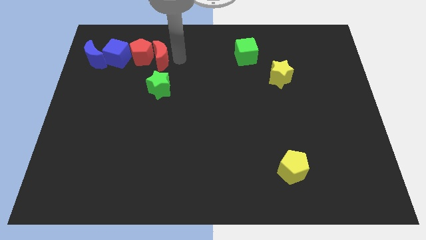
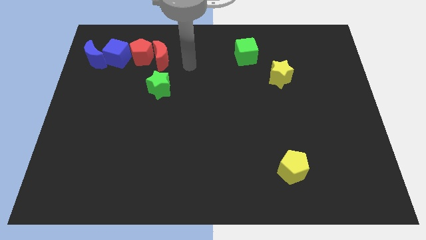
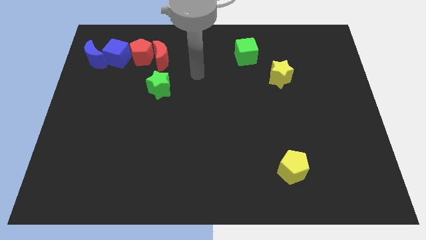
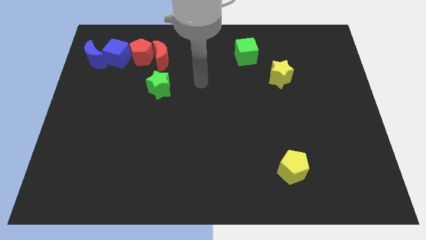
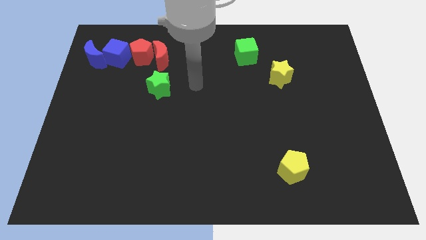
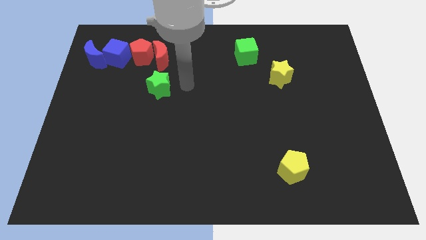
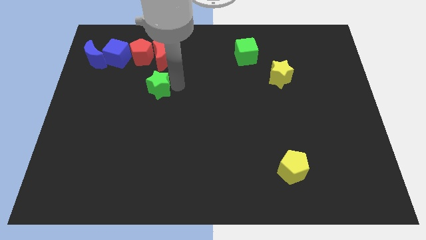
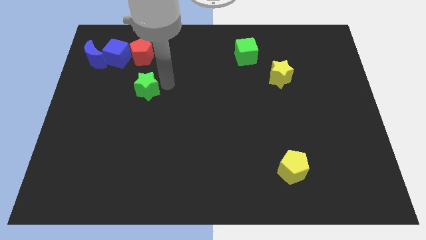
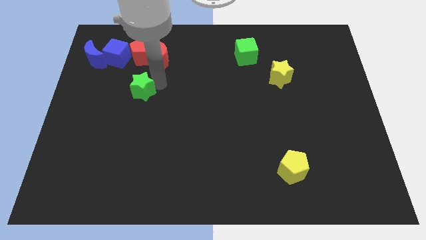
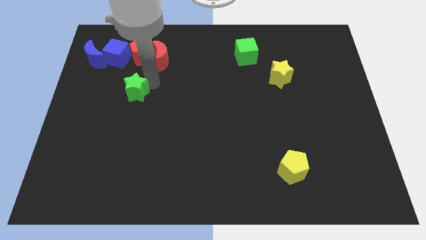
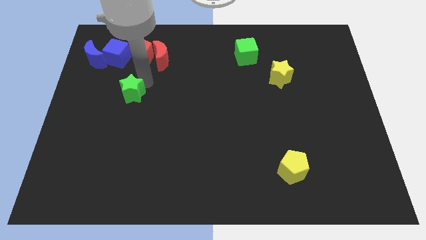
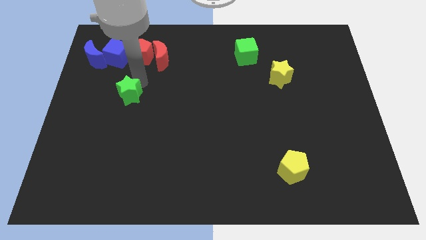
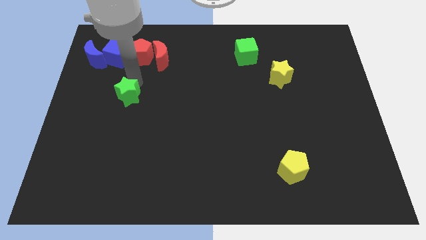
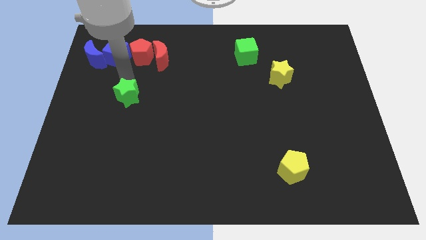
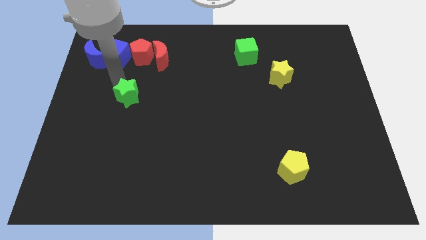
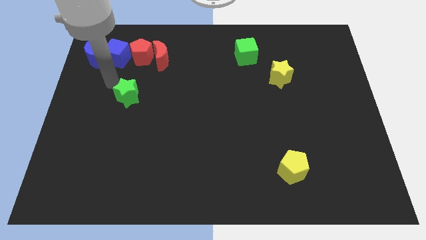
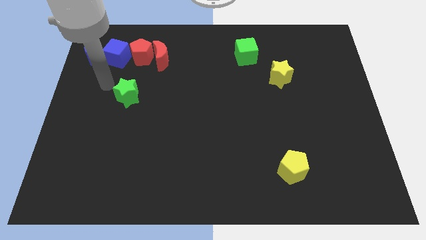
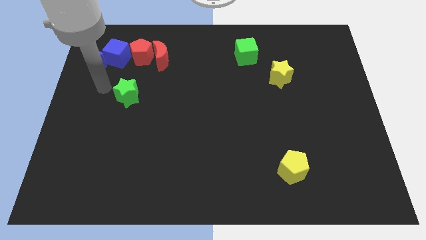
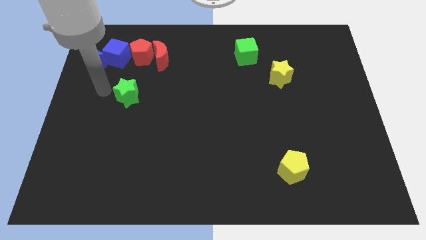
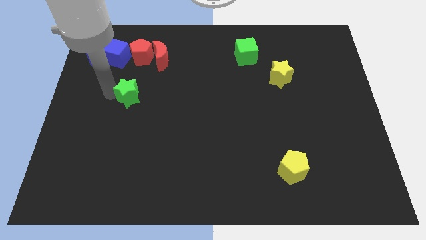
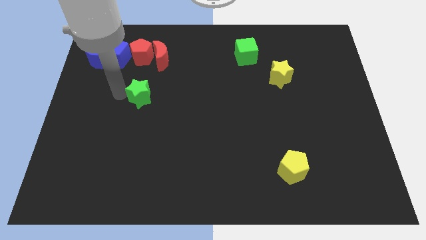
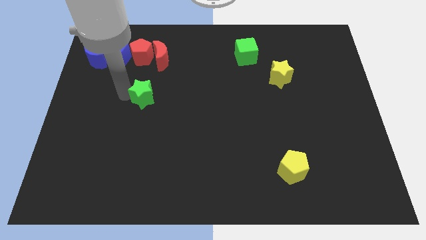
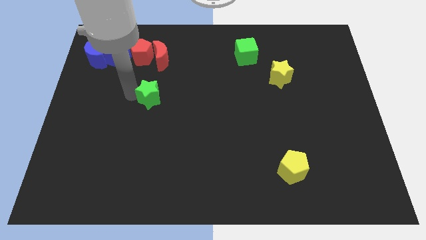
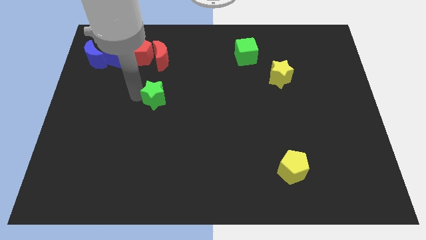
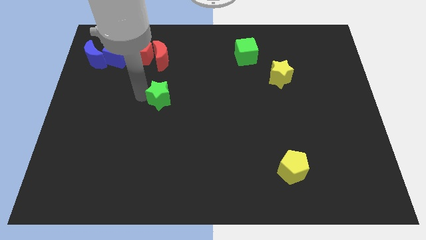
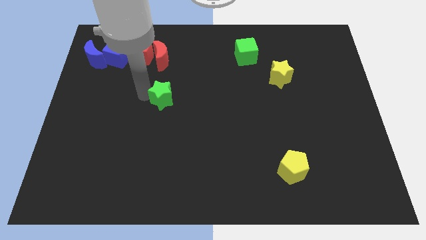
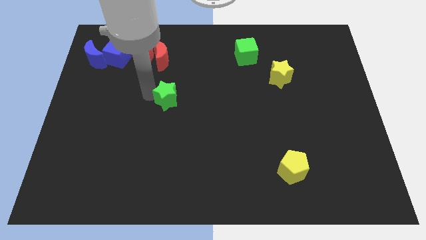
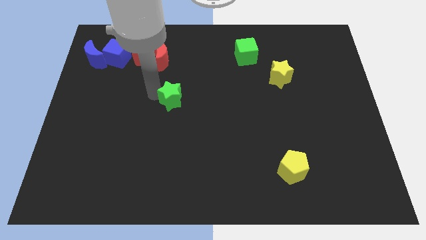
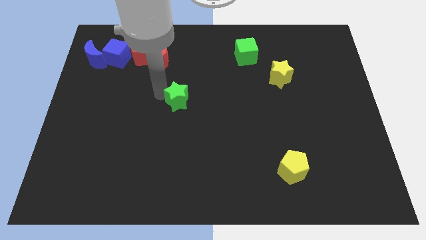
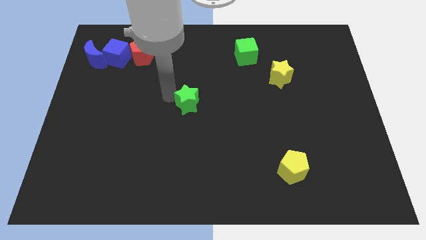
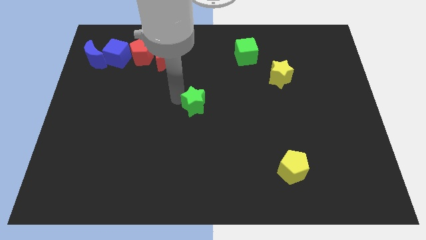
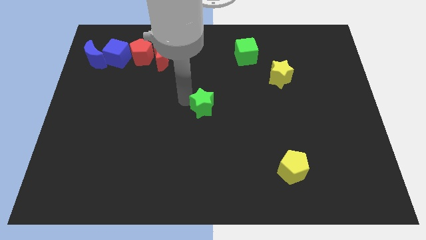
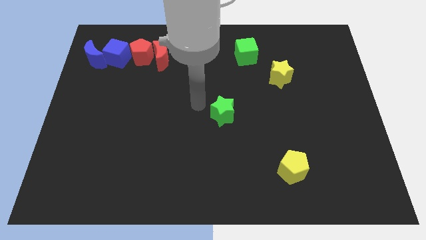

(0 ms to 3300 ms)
move the green star to the bottom of the board

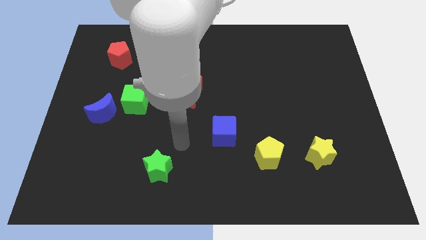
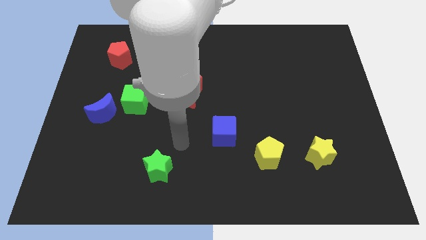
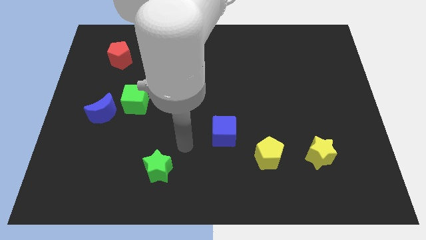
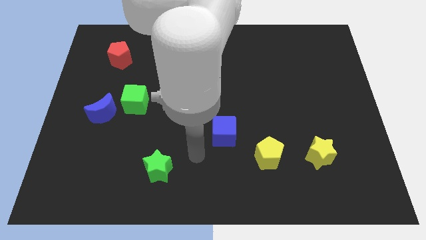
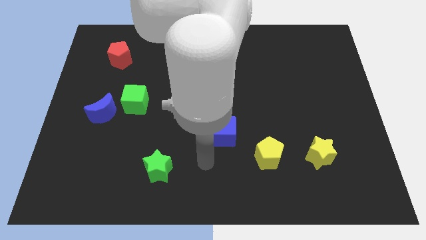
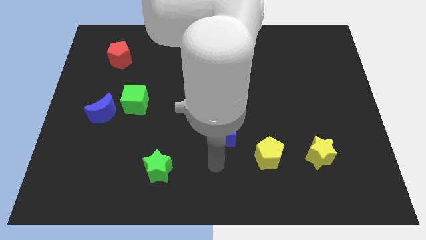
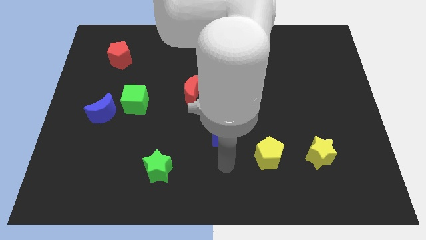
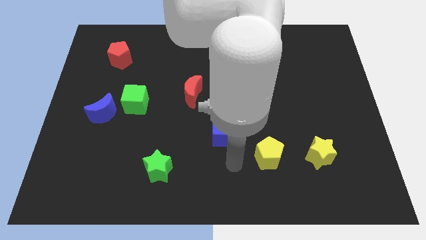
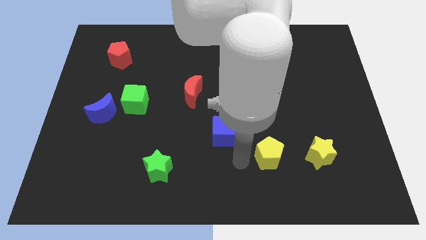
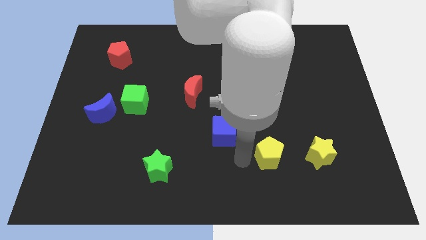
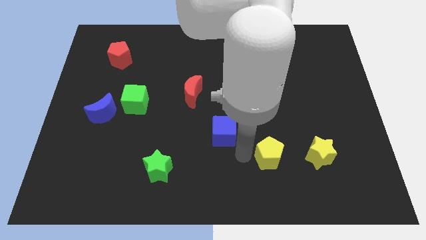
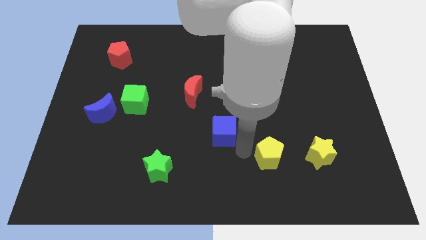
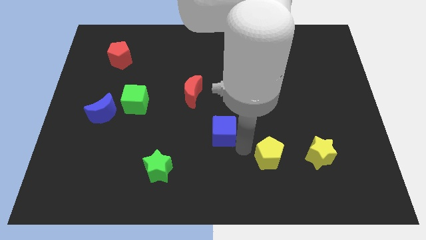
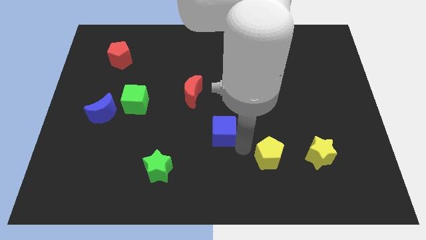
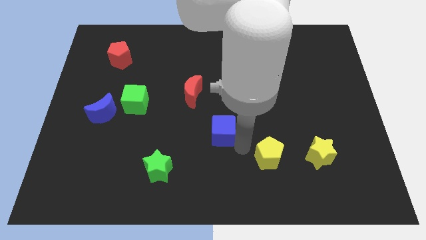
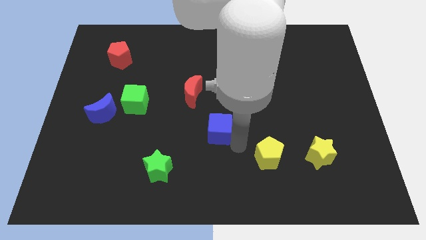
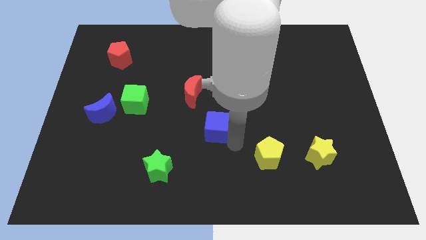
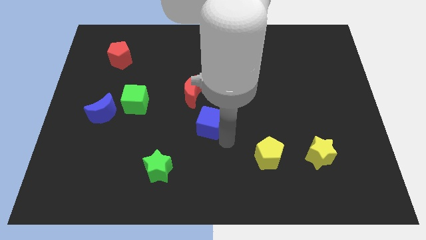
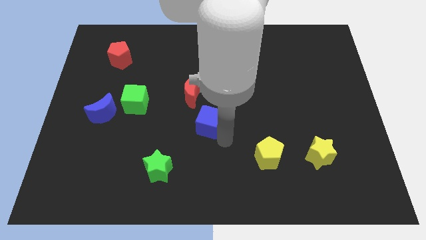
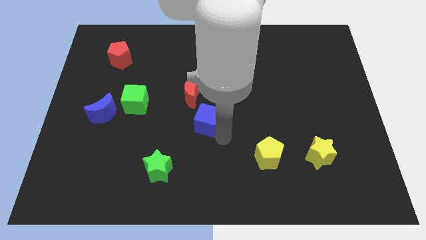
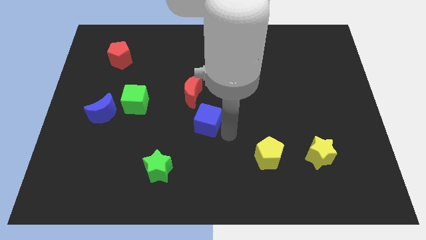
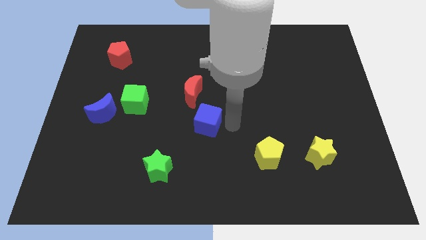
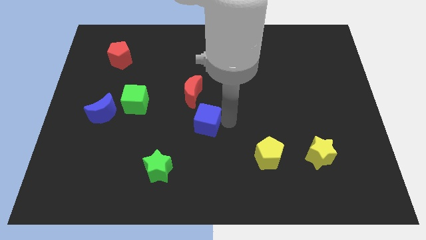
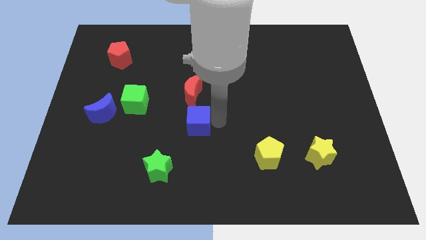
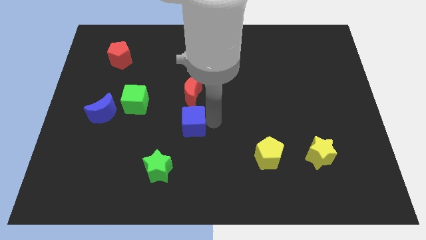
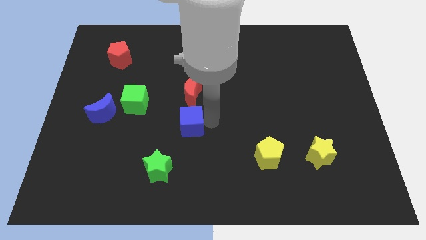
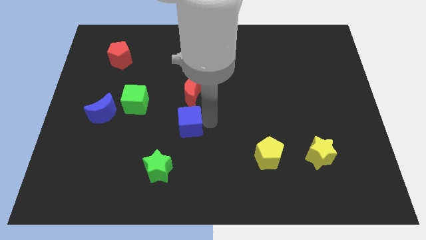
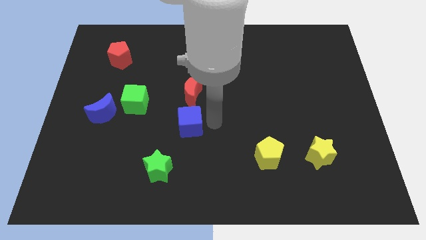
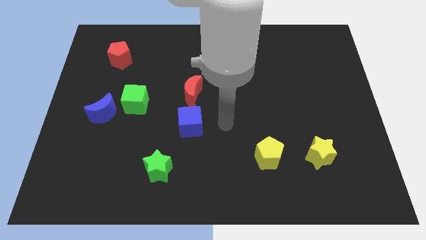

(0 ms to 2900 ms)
put the blue cube below the red moon

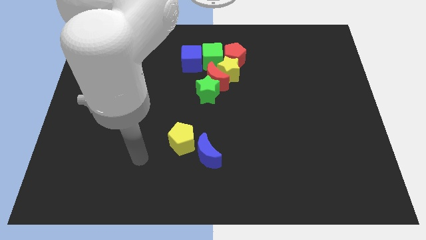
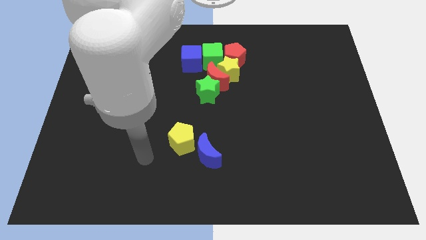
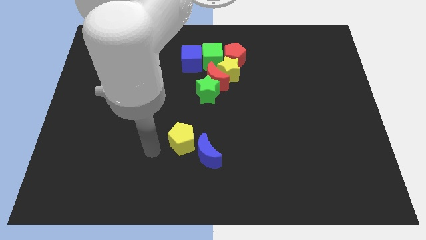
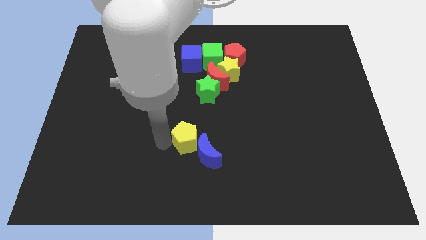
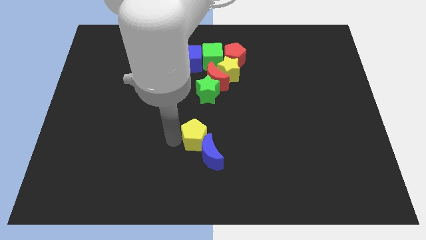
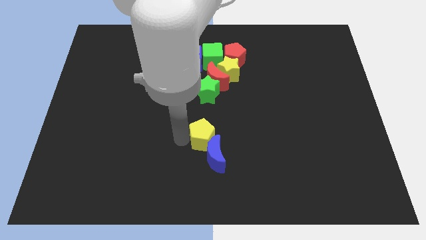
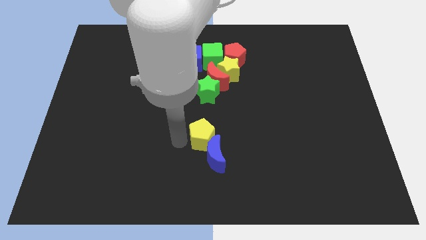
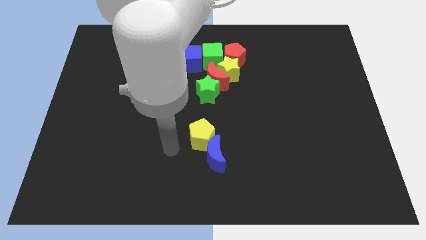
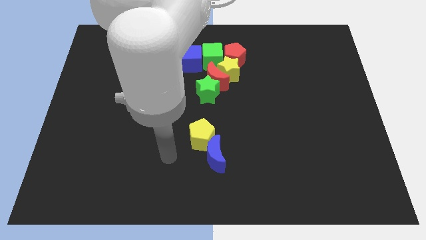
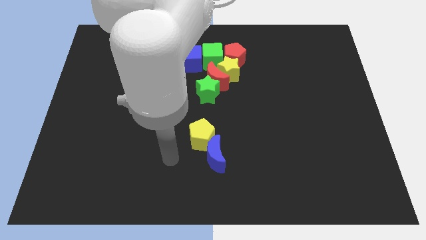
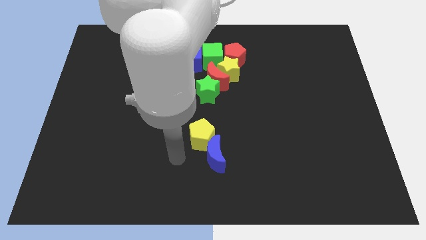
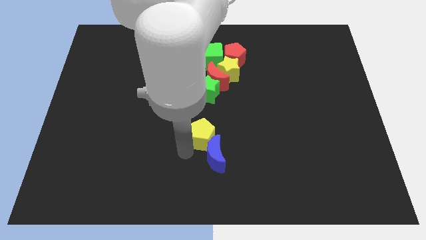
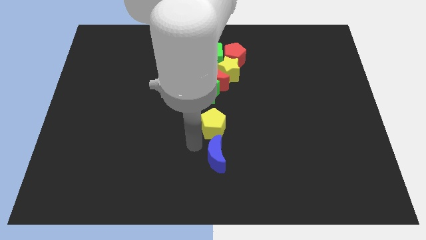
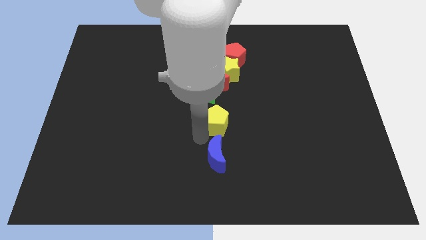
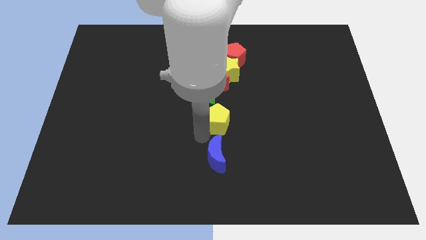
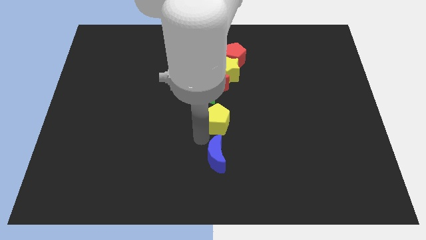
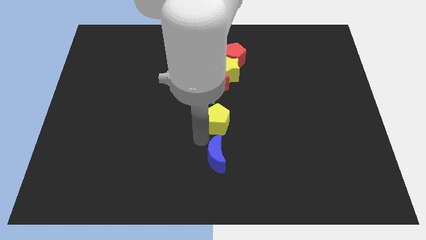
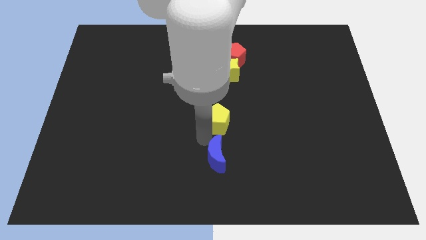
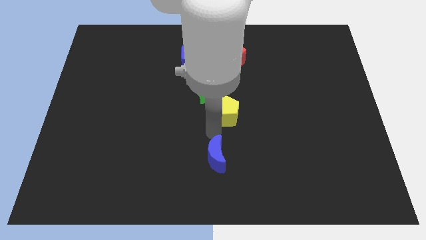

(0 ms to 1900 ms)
place the yellow pentagon to the top of the blue moon

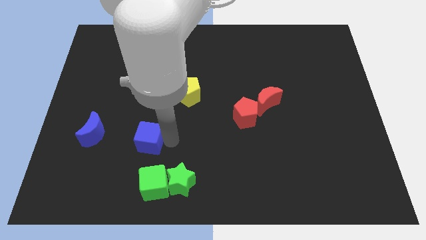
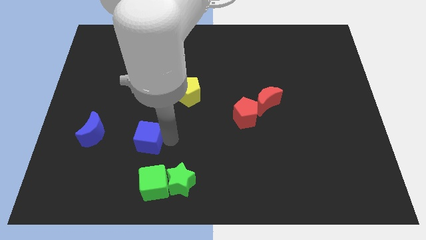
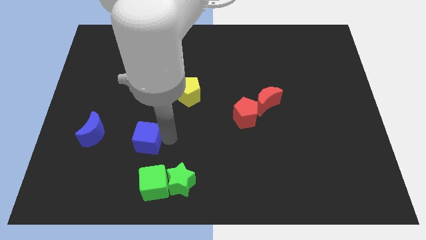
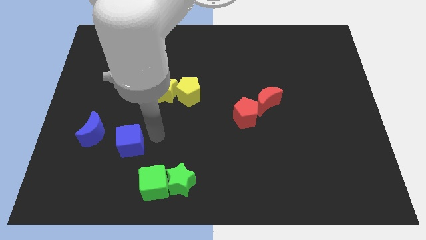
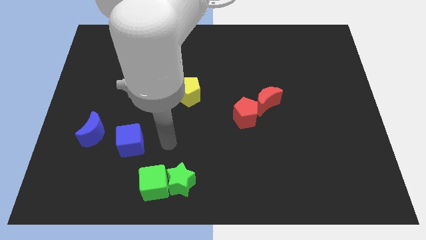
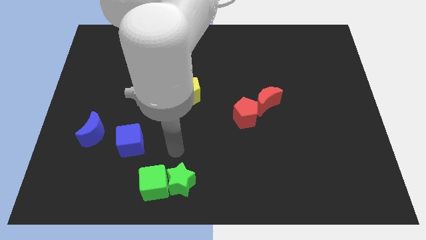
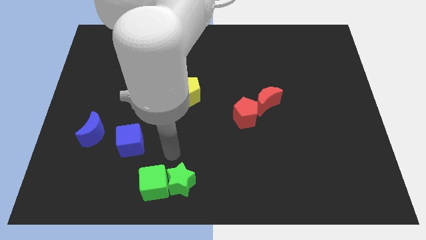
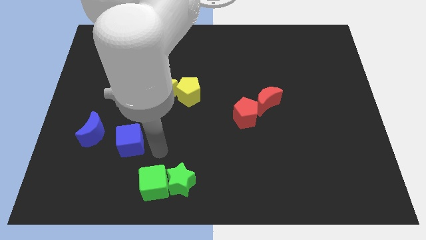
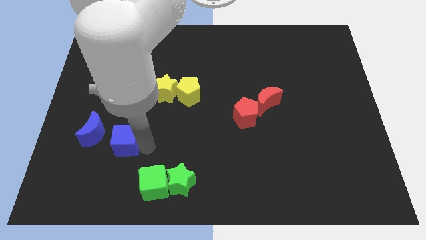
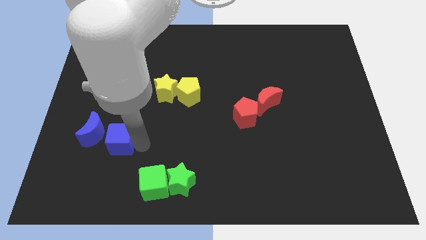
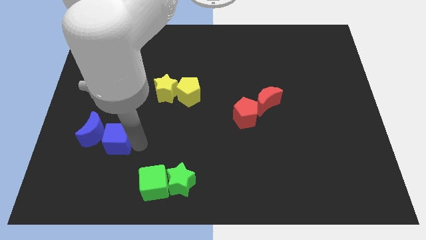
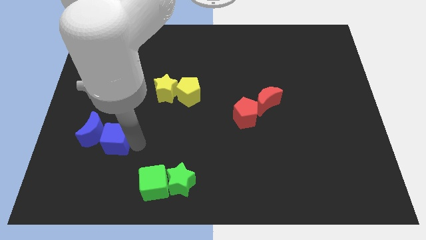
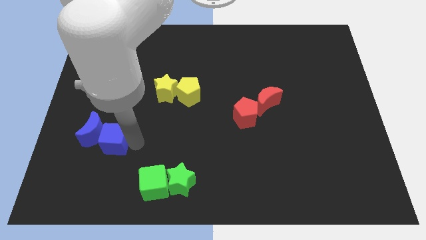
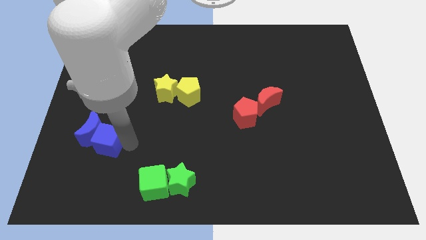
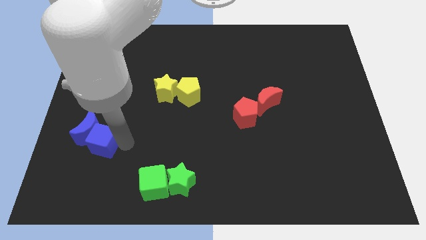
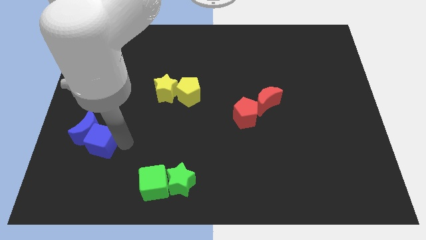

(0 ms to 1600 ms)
push the blue cube into the blue moon
